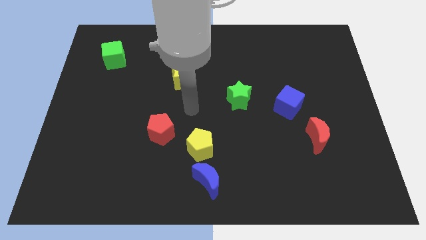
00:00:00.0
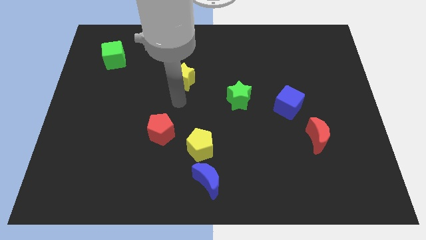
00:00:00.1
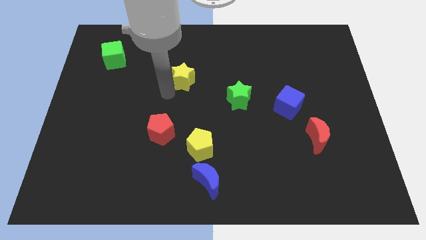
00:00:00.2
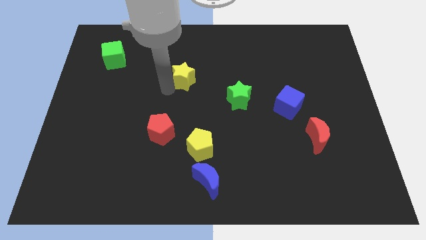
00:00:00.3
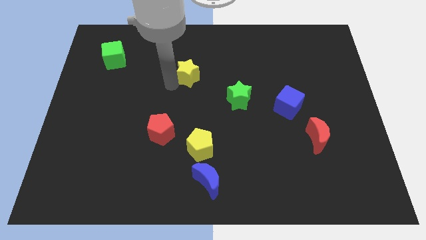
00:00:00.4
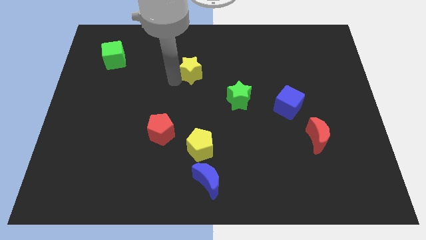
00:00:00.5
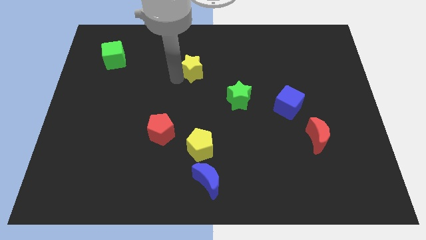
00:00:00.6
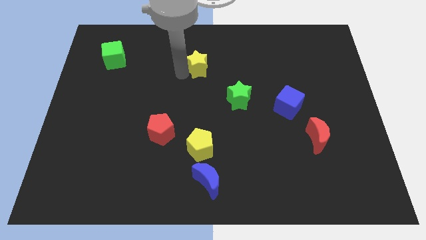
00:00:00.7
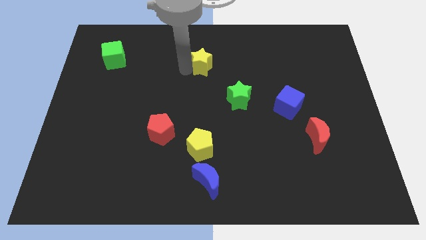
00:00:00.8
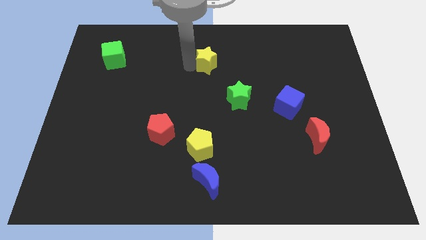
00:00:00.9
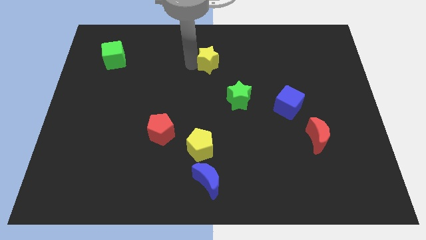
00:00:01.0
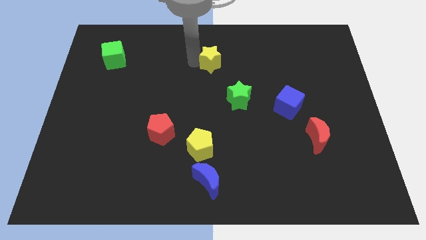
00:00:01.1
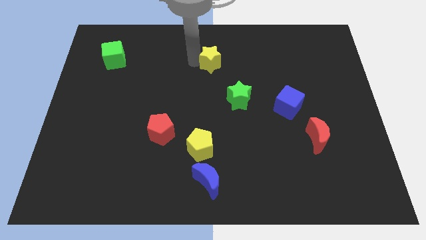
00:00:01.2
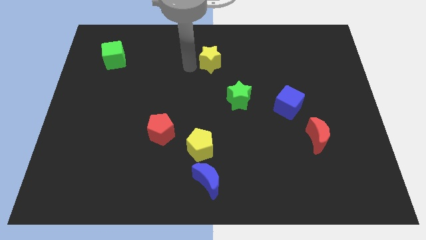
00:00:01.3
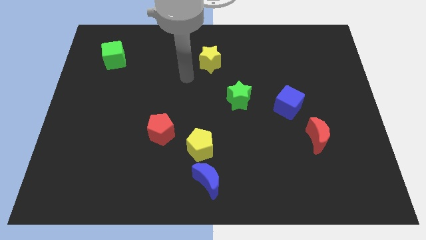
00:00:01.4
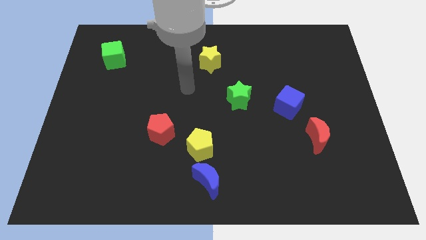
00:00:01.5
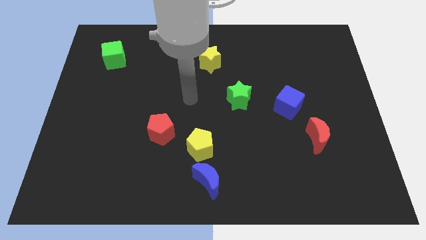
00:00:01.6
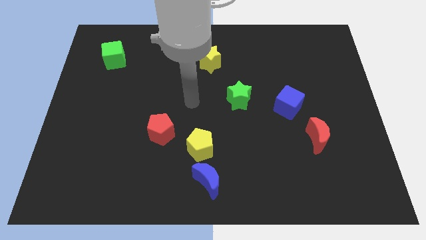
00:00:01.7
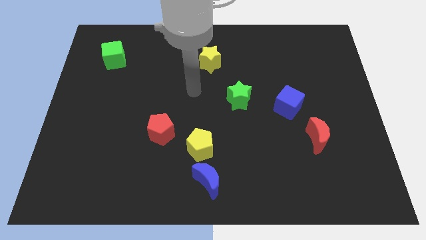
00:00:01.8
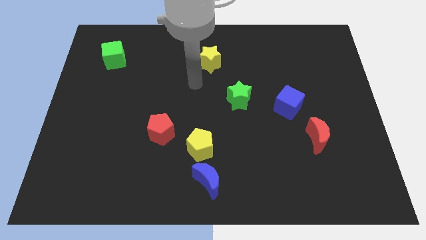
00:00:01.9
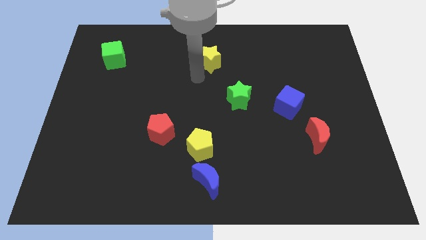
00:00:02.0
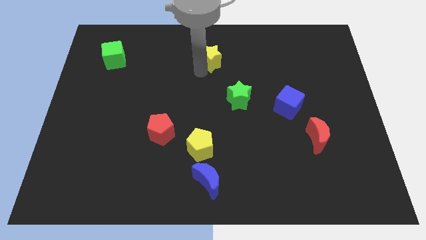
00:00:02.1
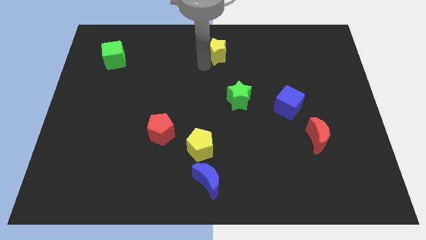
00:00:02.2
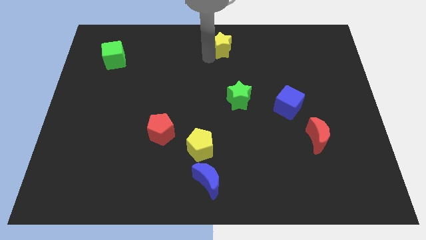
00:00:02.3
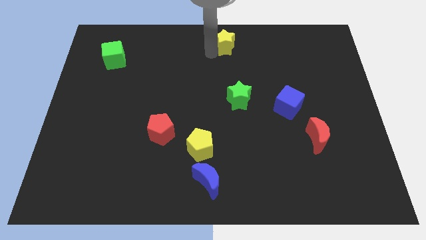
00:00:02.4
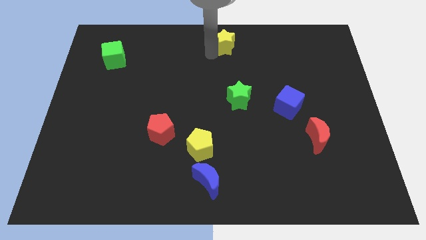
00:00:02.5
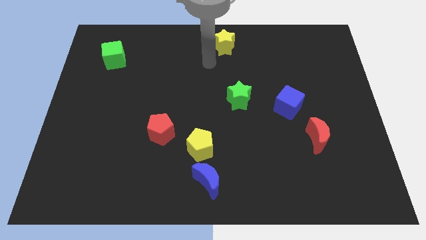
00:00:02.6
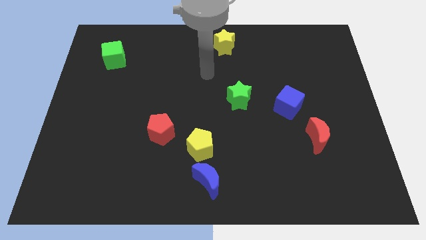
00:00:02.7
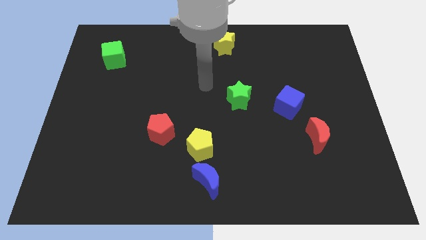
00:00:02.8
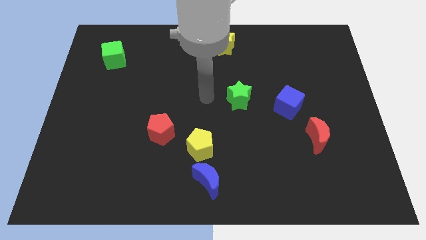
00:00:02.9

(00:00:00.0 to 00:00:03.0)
move the yellow star to the top center

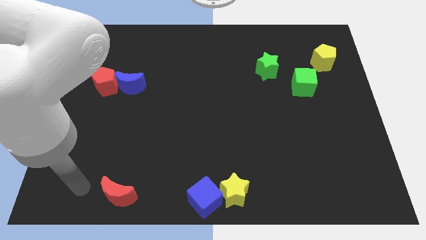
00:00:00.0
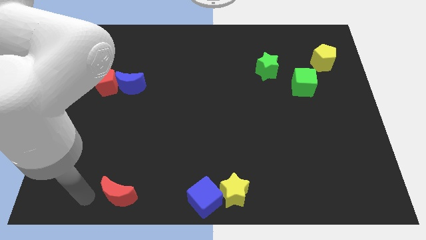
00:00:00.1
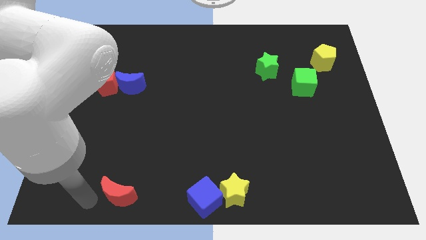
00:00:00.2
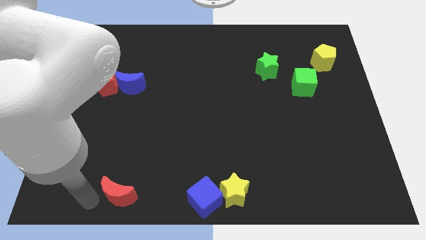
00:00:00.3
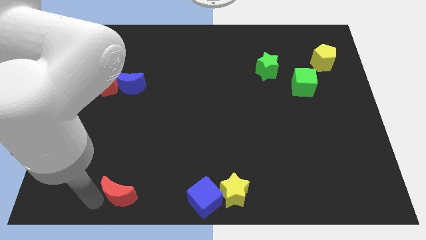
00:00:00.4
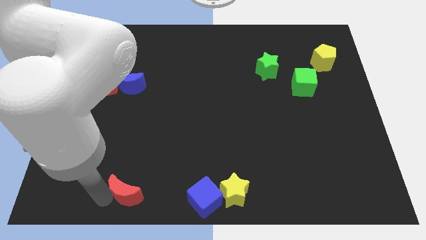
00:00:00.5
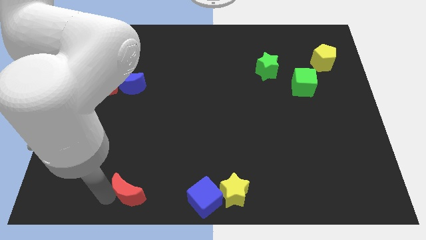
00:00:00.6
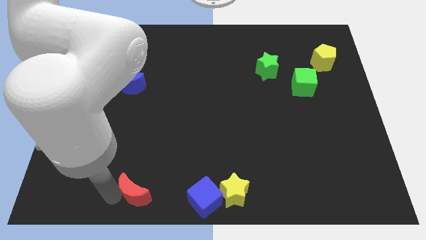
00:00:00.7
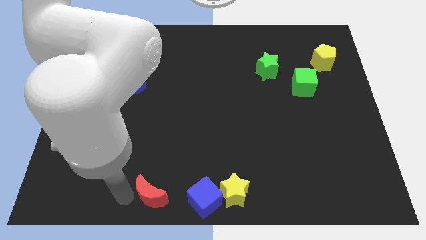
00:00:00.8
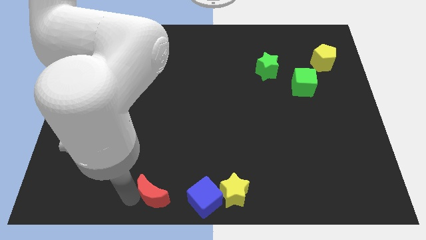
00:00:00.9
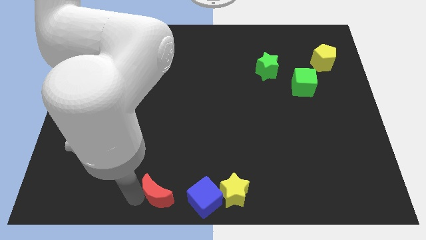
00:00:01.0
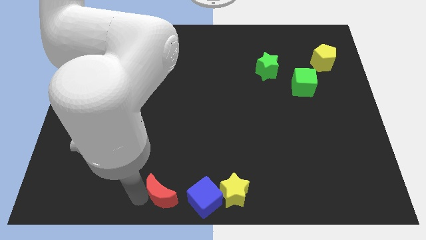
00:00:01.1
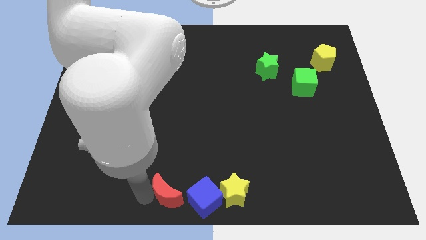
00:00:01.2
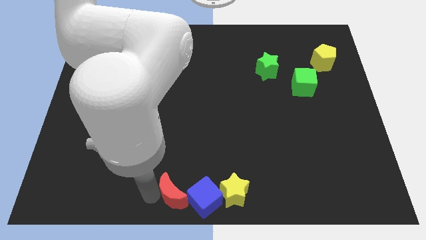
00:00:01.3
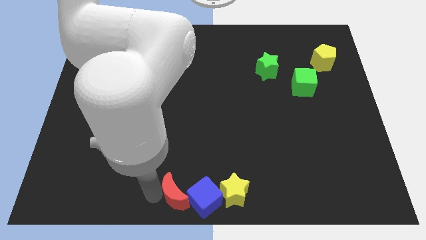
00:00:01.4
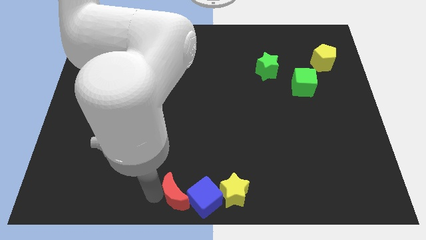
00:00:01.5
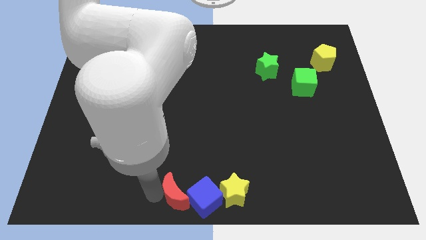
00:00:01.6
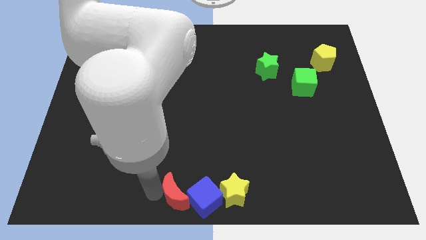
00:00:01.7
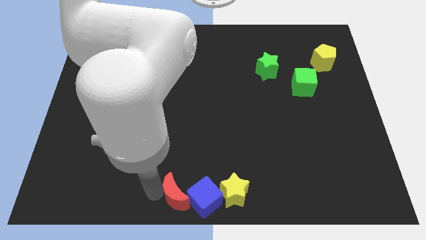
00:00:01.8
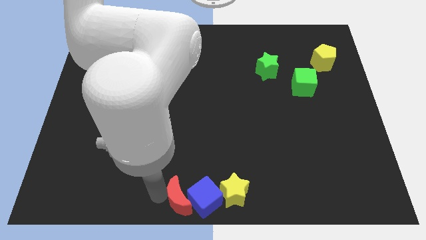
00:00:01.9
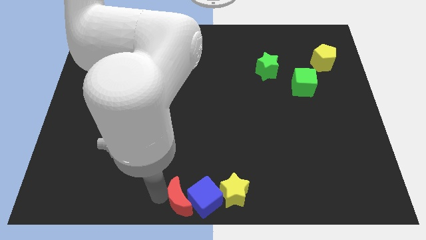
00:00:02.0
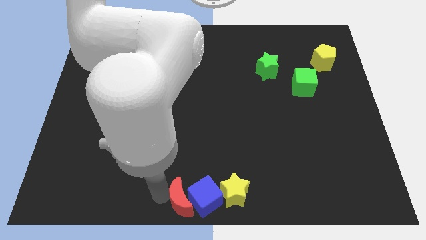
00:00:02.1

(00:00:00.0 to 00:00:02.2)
push the red half moon into the blue cube to the bottom center

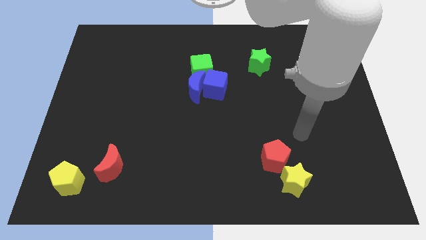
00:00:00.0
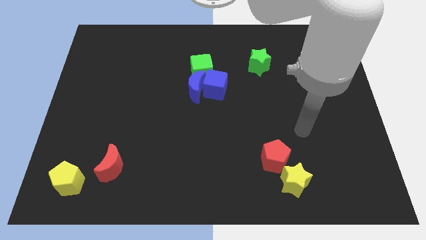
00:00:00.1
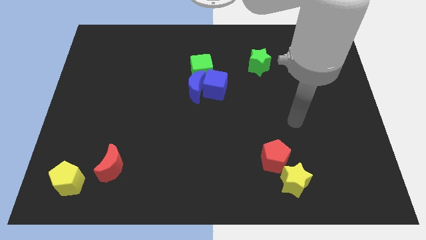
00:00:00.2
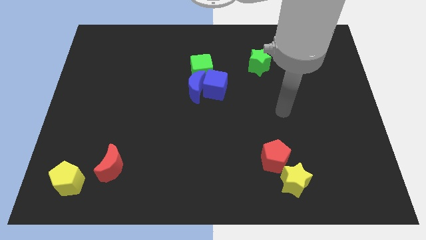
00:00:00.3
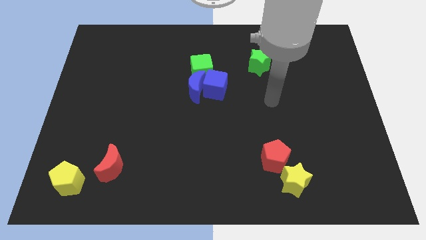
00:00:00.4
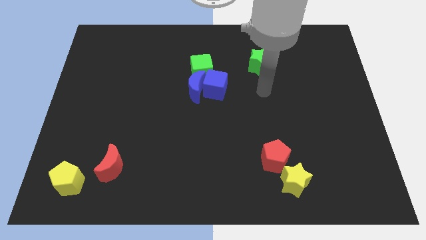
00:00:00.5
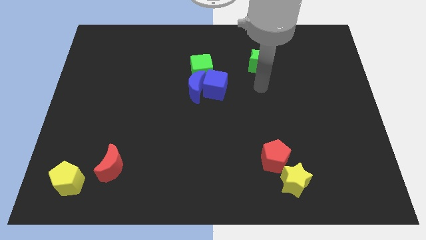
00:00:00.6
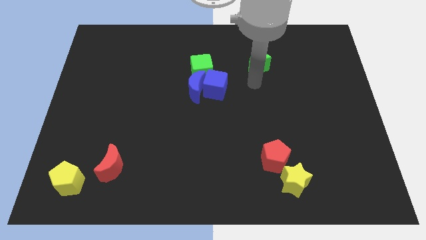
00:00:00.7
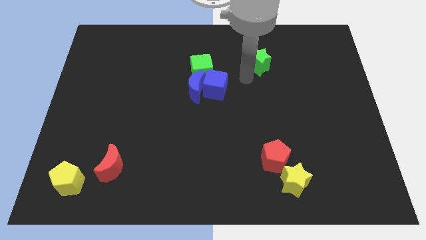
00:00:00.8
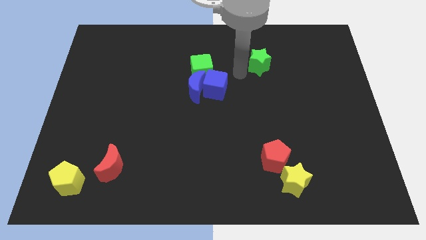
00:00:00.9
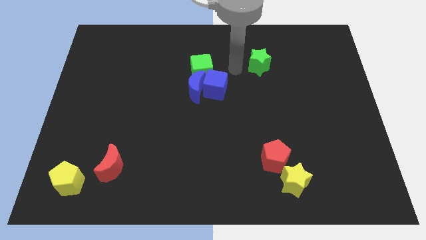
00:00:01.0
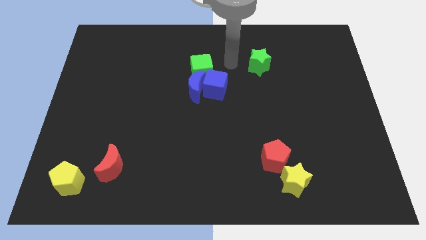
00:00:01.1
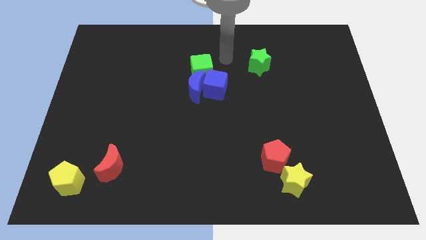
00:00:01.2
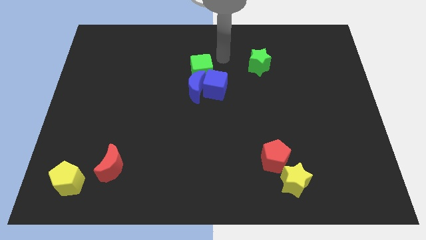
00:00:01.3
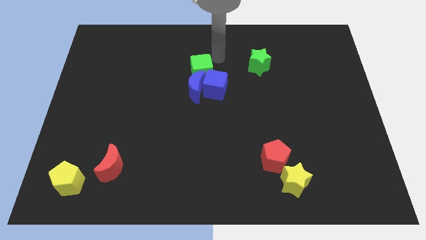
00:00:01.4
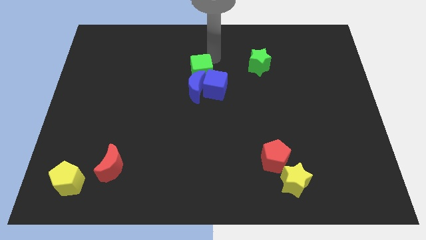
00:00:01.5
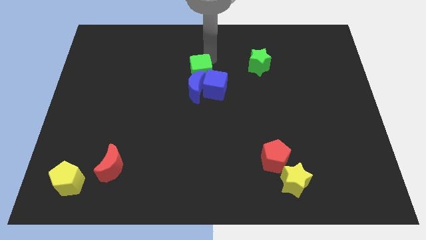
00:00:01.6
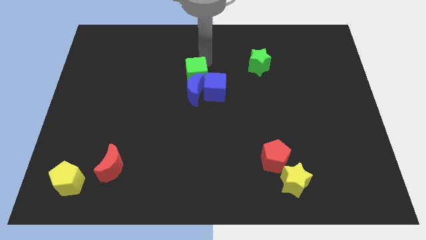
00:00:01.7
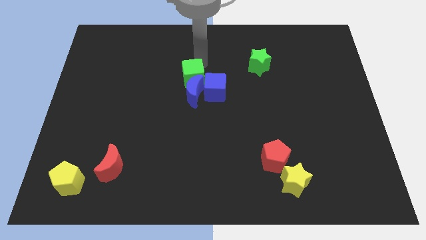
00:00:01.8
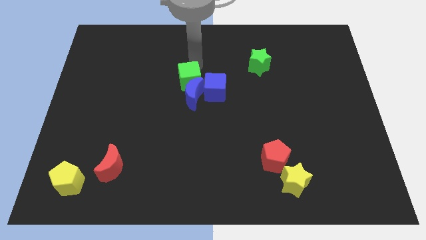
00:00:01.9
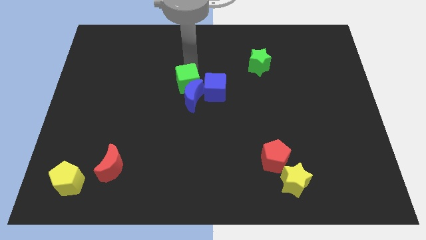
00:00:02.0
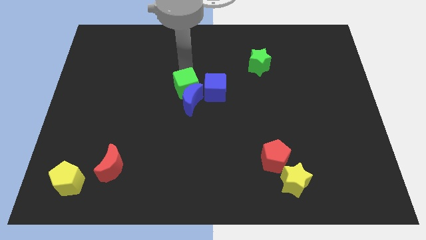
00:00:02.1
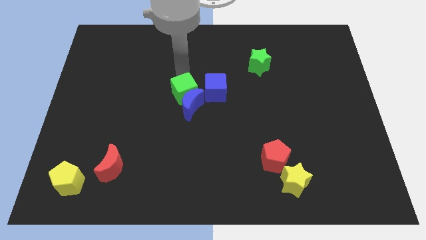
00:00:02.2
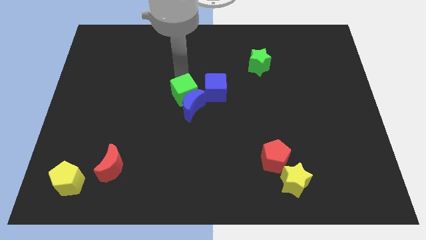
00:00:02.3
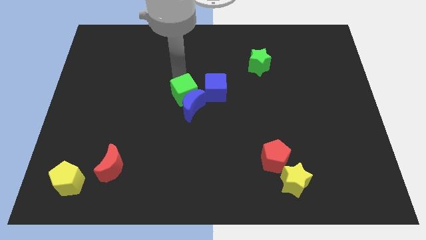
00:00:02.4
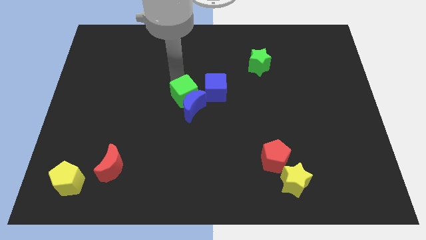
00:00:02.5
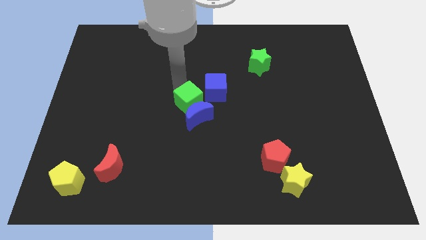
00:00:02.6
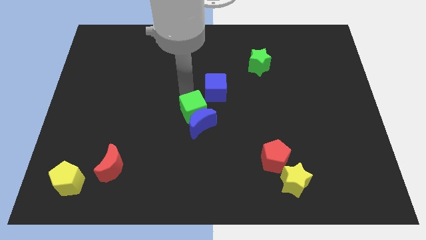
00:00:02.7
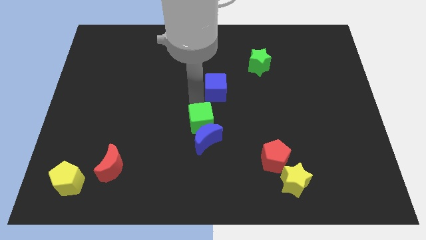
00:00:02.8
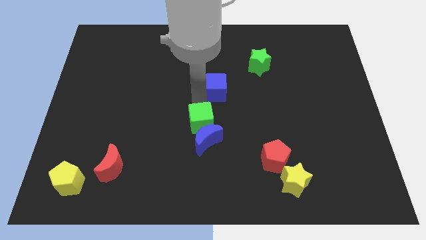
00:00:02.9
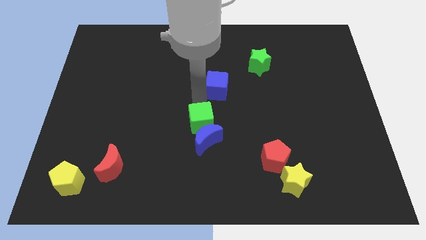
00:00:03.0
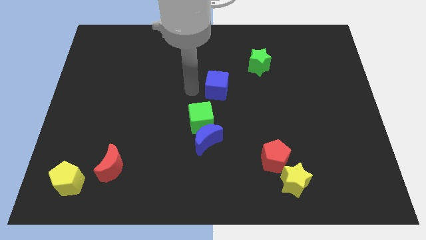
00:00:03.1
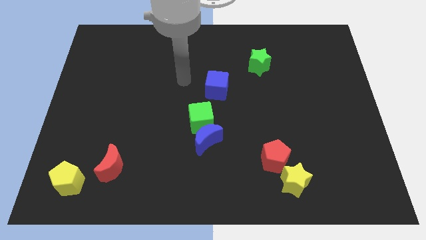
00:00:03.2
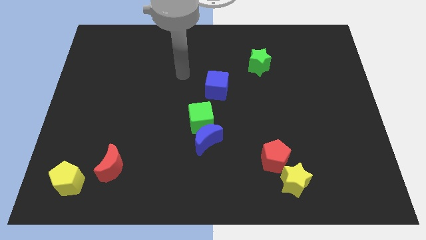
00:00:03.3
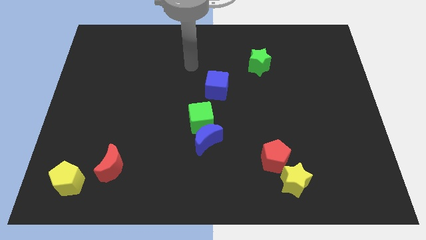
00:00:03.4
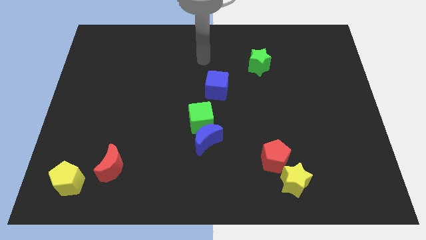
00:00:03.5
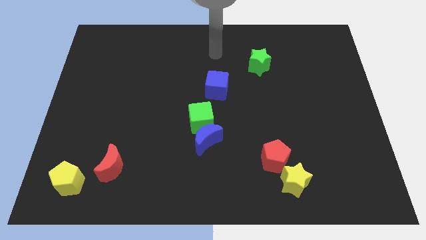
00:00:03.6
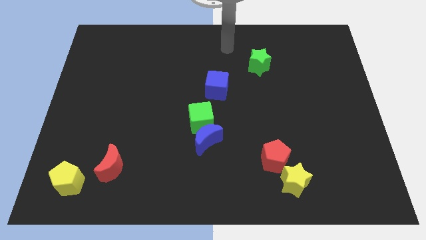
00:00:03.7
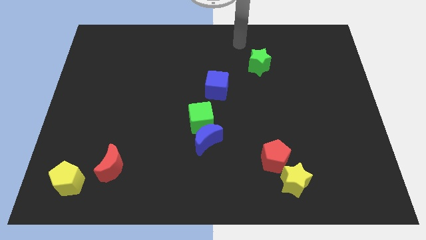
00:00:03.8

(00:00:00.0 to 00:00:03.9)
push green cube along with blue moon to the center
